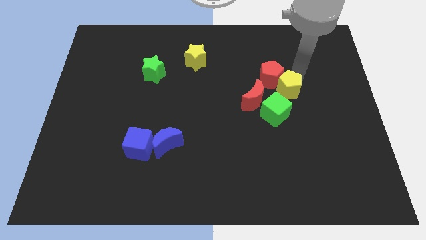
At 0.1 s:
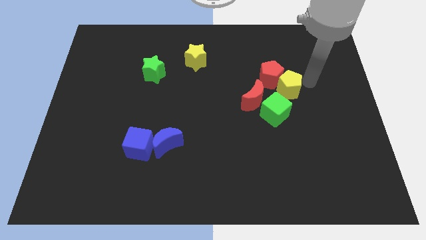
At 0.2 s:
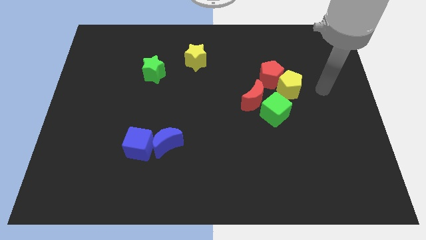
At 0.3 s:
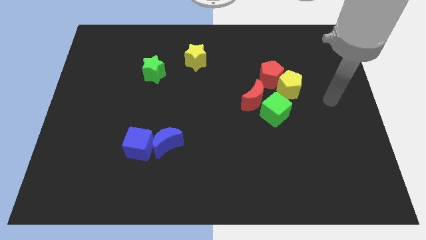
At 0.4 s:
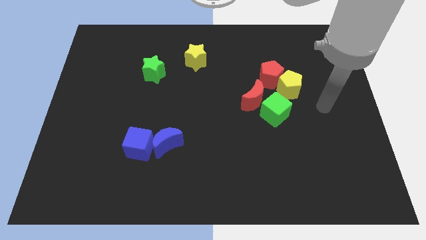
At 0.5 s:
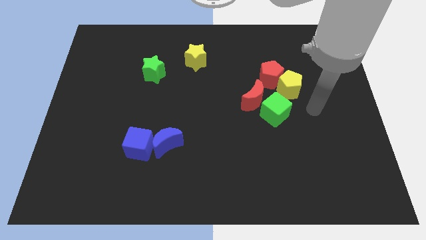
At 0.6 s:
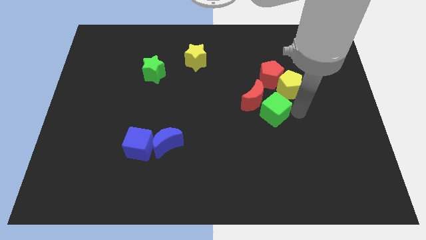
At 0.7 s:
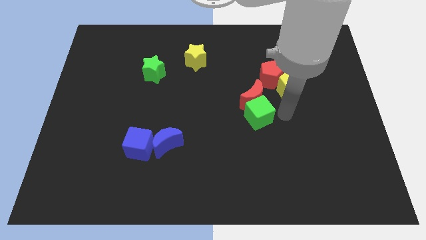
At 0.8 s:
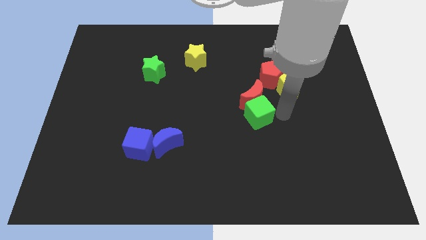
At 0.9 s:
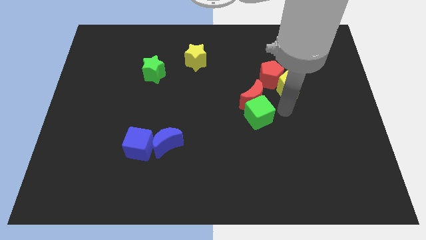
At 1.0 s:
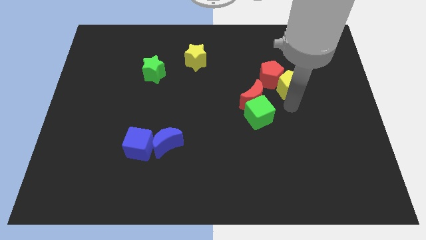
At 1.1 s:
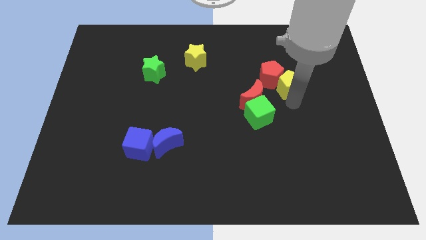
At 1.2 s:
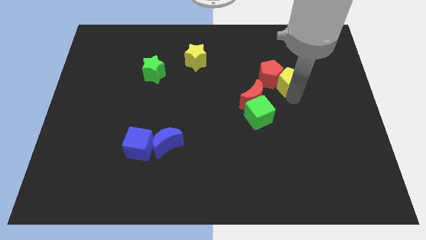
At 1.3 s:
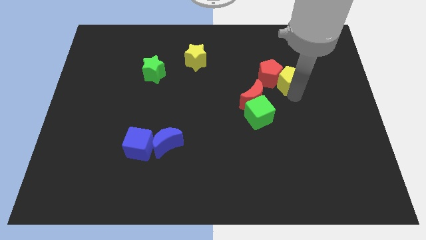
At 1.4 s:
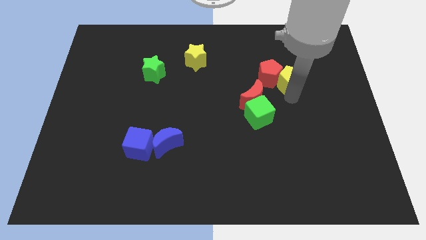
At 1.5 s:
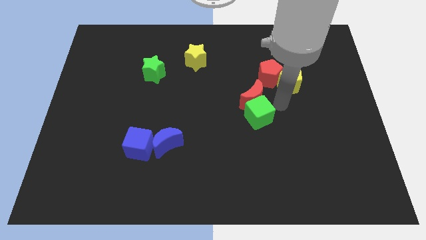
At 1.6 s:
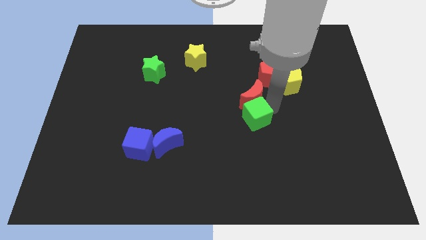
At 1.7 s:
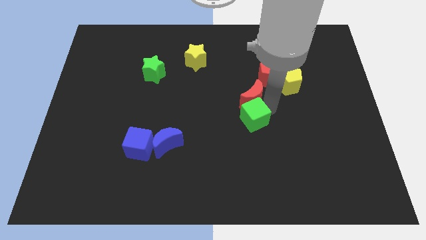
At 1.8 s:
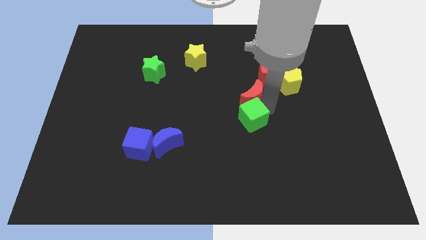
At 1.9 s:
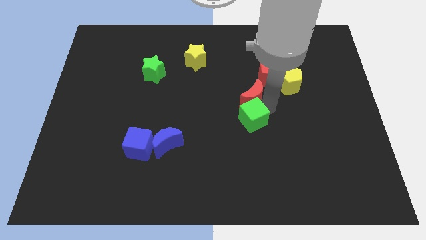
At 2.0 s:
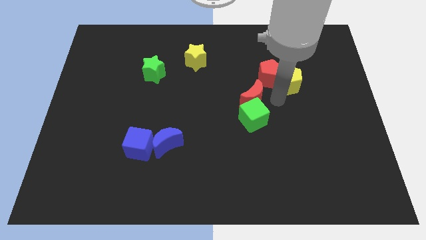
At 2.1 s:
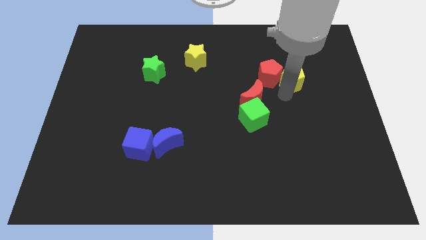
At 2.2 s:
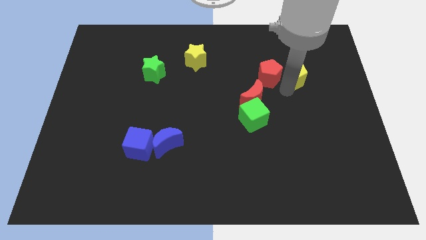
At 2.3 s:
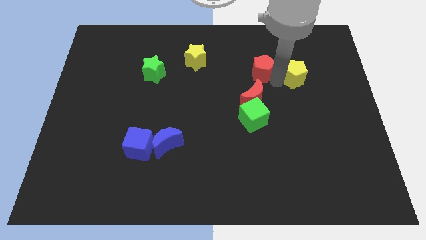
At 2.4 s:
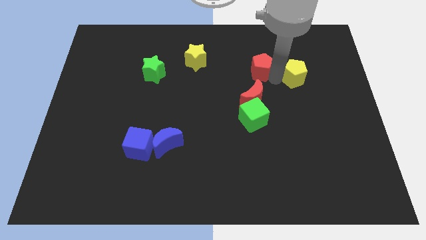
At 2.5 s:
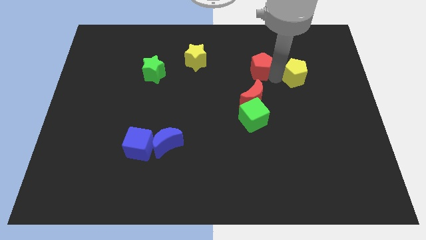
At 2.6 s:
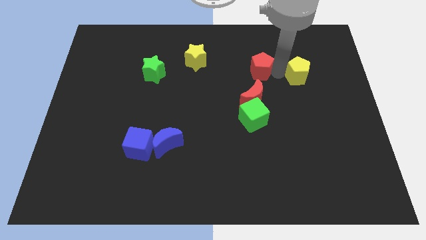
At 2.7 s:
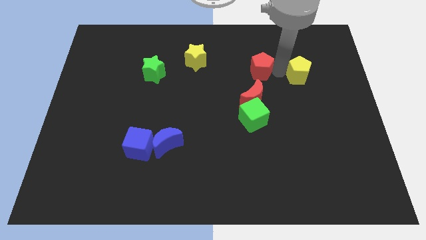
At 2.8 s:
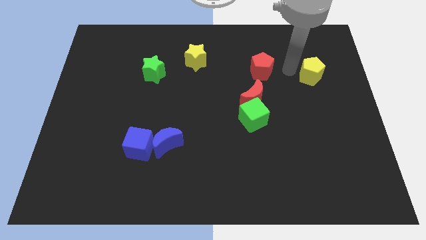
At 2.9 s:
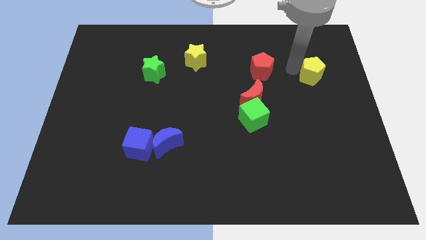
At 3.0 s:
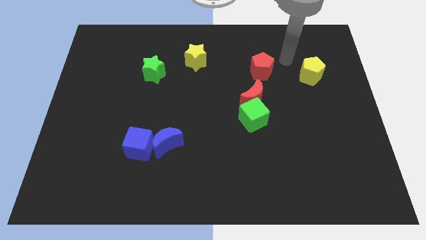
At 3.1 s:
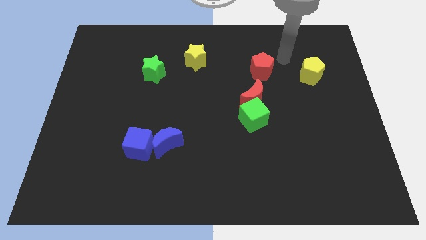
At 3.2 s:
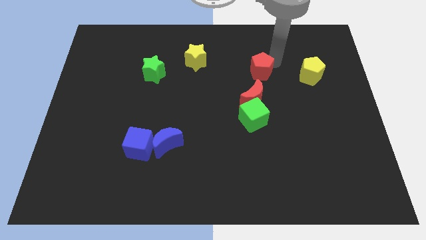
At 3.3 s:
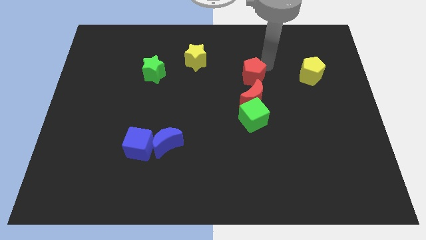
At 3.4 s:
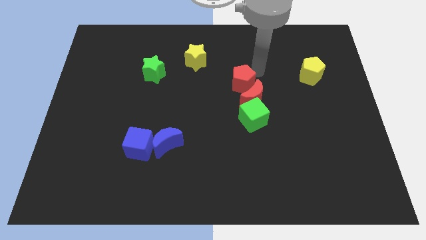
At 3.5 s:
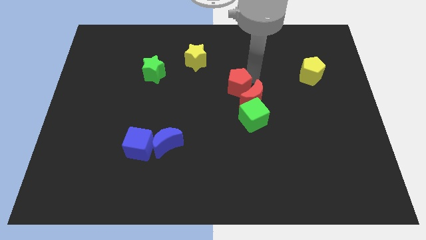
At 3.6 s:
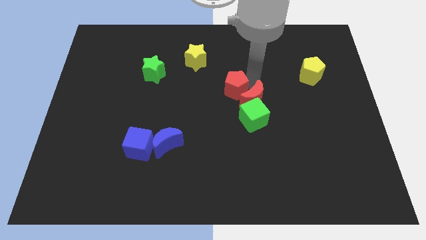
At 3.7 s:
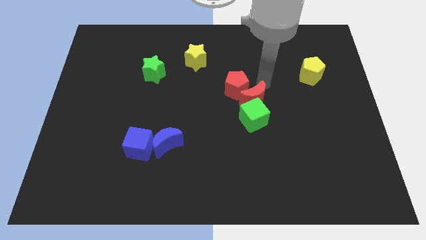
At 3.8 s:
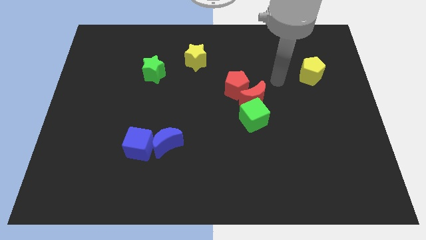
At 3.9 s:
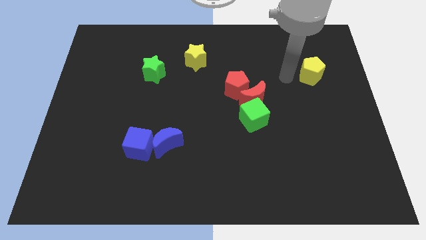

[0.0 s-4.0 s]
place the red pentagon in between red crescent and yellow star

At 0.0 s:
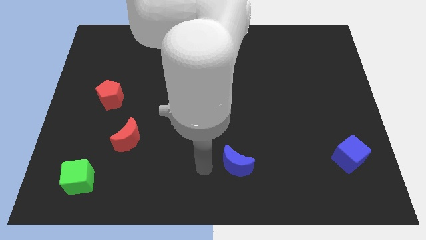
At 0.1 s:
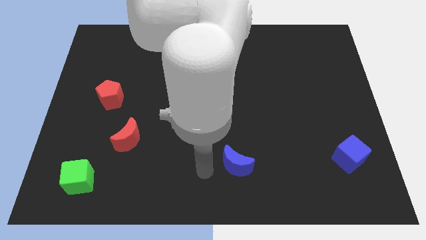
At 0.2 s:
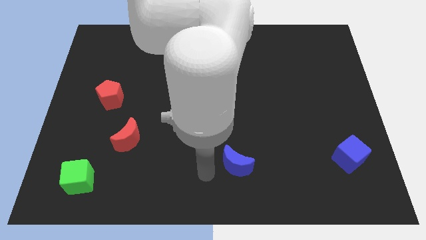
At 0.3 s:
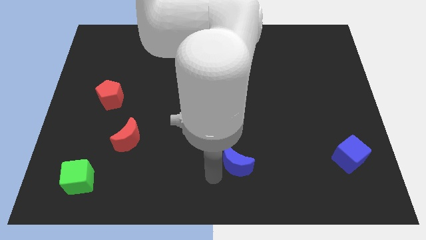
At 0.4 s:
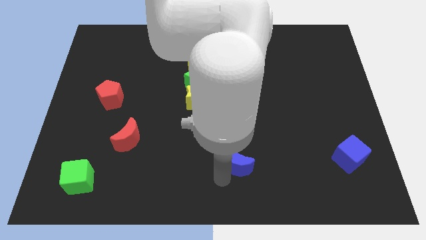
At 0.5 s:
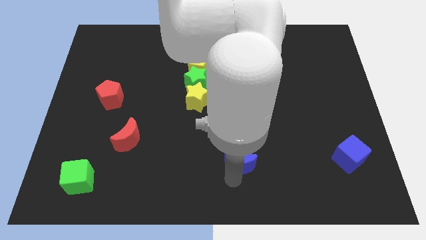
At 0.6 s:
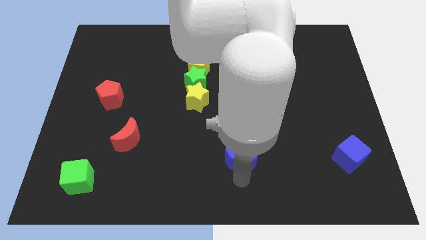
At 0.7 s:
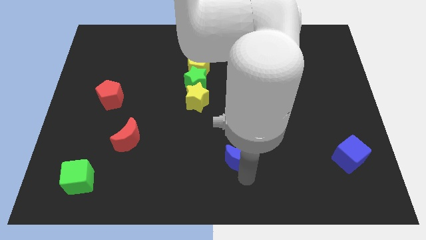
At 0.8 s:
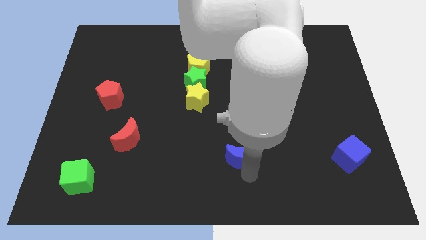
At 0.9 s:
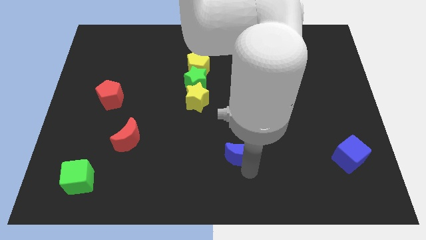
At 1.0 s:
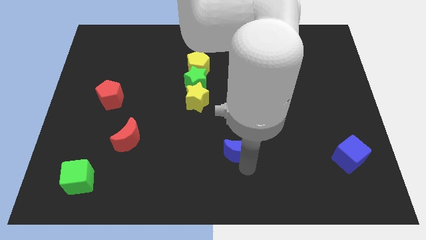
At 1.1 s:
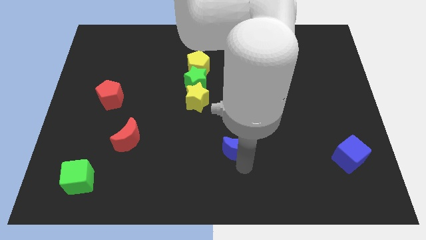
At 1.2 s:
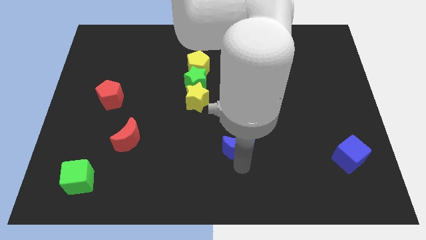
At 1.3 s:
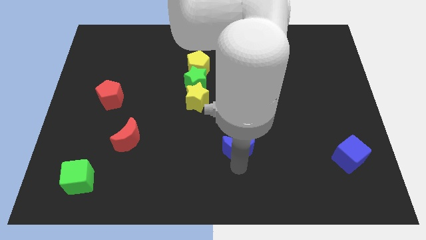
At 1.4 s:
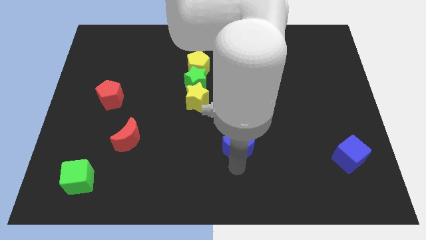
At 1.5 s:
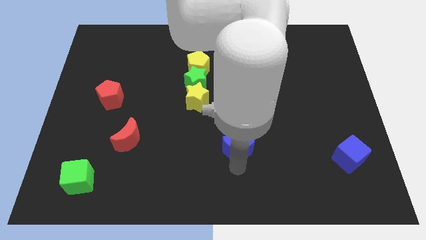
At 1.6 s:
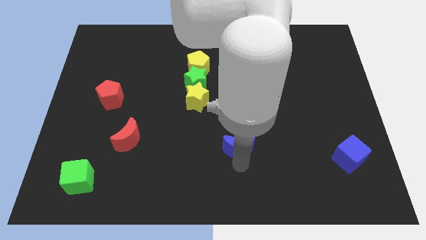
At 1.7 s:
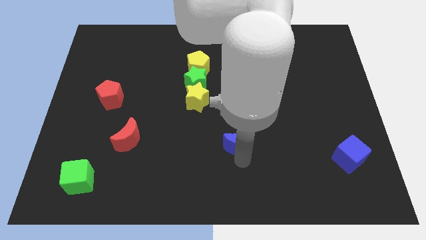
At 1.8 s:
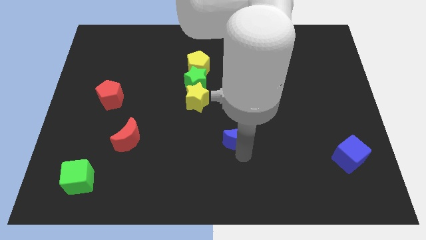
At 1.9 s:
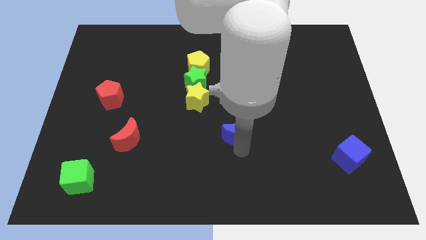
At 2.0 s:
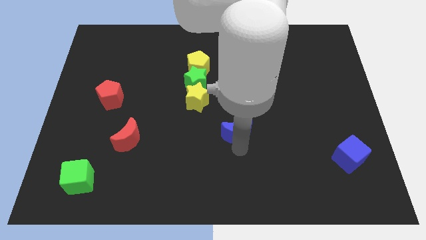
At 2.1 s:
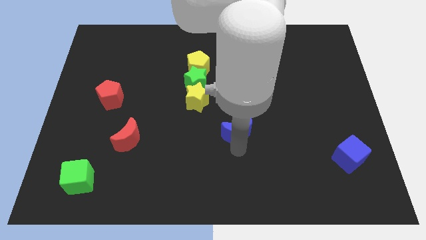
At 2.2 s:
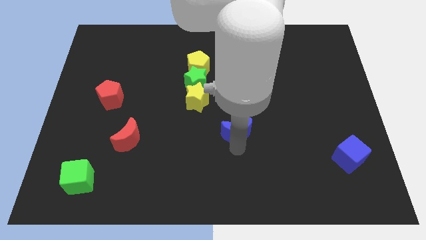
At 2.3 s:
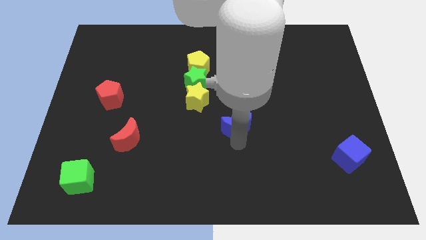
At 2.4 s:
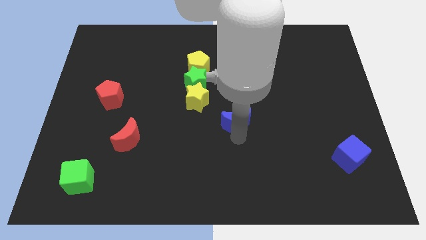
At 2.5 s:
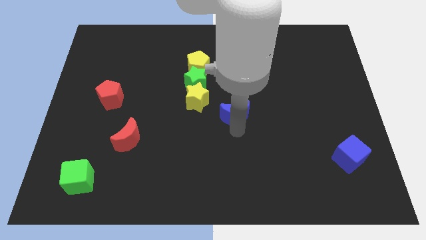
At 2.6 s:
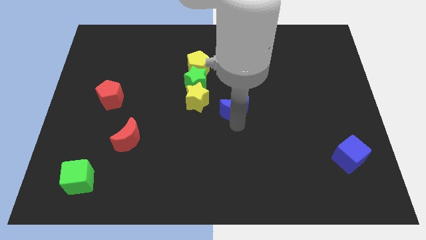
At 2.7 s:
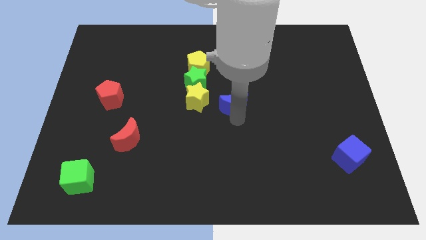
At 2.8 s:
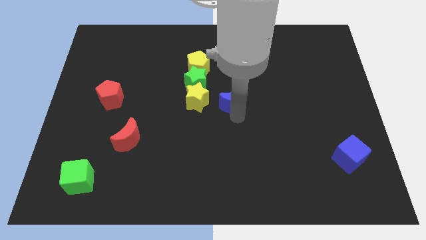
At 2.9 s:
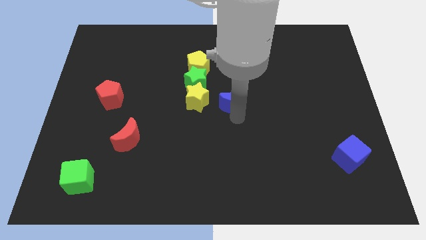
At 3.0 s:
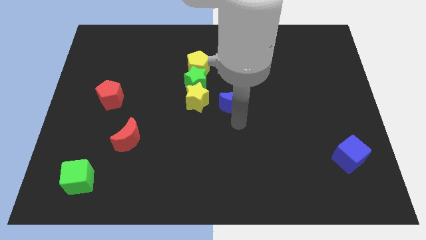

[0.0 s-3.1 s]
move the blue crescent to the center of the board

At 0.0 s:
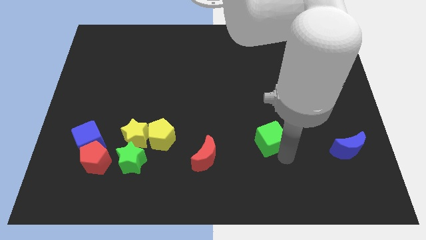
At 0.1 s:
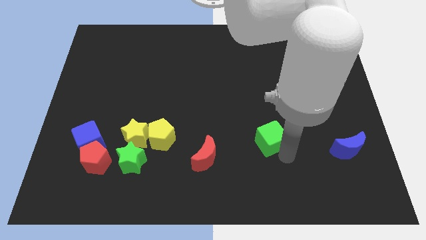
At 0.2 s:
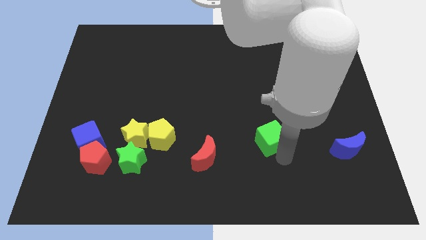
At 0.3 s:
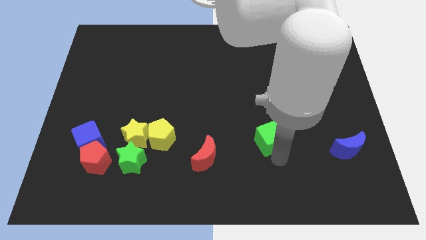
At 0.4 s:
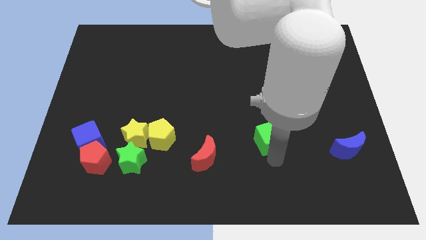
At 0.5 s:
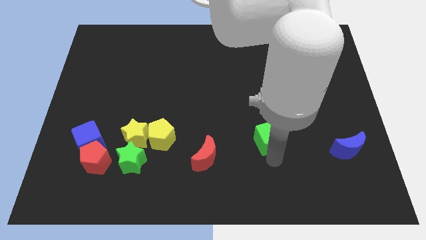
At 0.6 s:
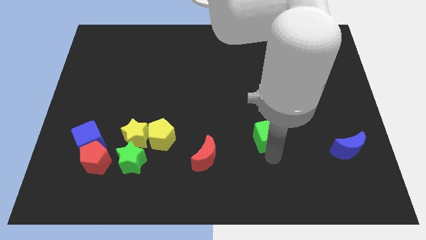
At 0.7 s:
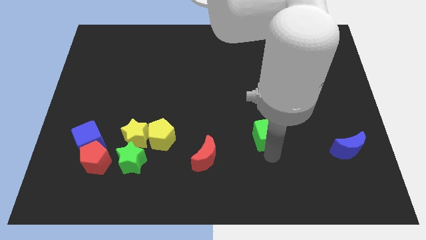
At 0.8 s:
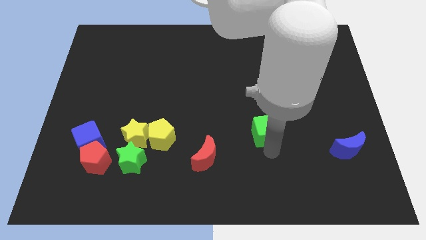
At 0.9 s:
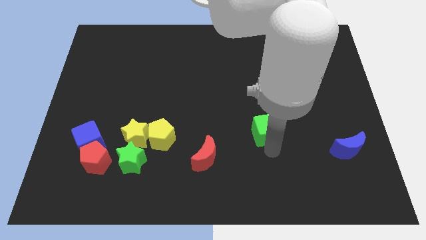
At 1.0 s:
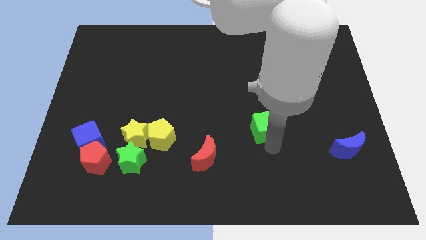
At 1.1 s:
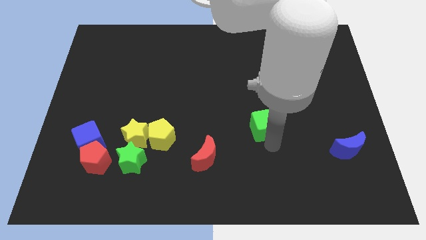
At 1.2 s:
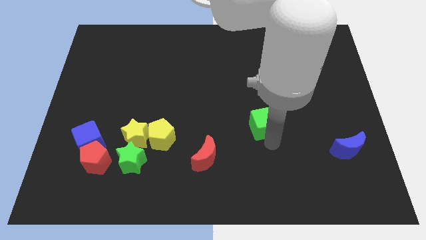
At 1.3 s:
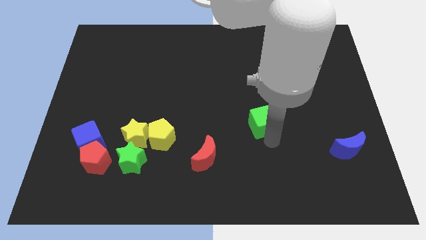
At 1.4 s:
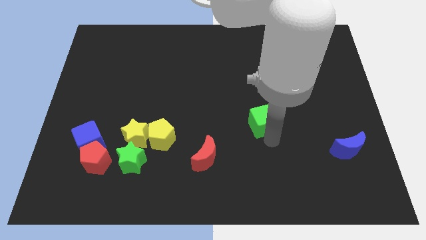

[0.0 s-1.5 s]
move the green cube away from the horizontal line

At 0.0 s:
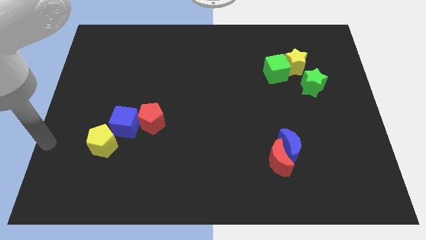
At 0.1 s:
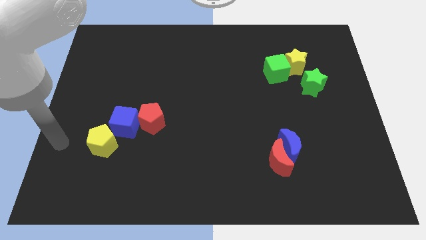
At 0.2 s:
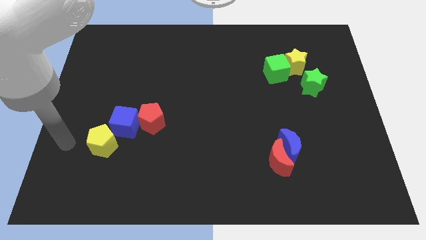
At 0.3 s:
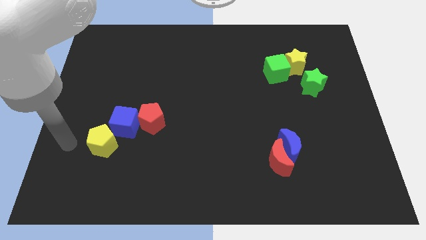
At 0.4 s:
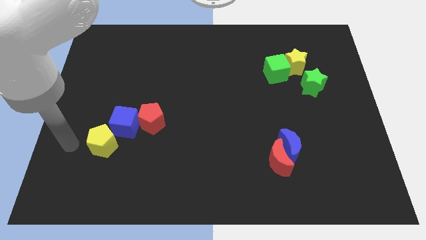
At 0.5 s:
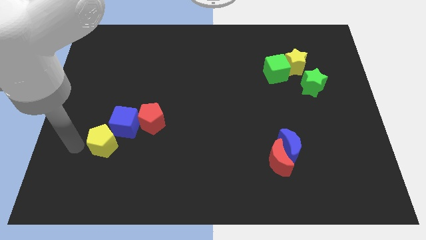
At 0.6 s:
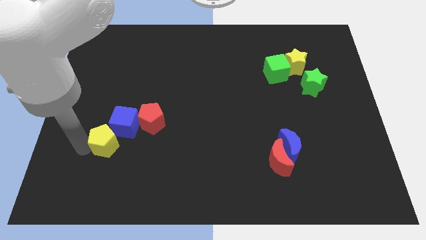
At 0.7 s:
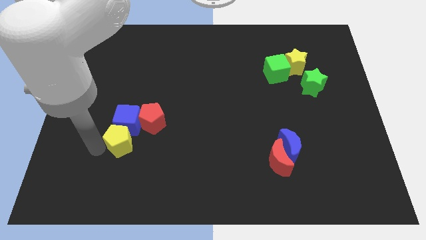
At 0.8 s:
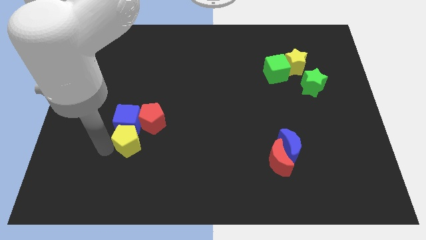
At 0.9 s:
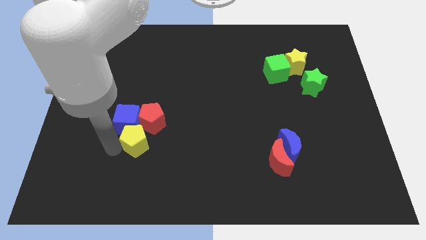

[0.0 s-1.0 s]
move the yellow pentagon at the bottom of the blue cube
